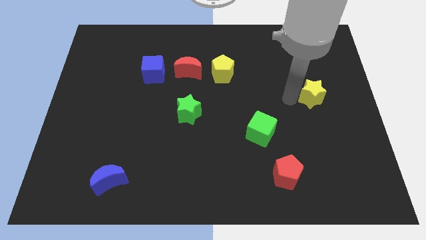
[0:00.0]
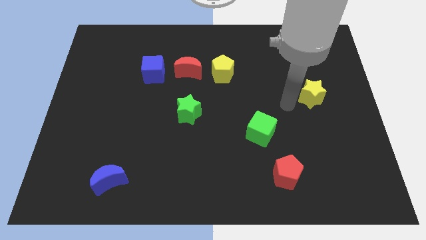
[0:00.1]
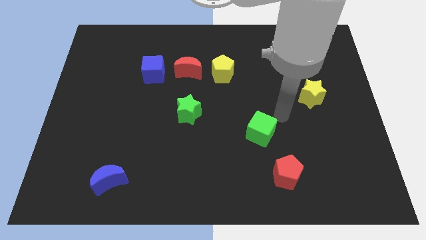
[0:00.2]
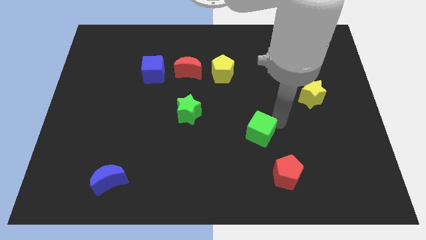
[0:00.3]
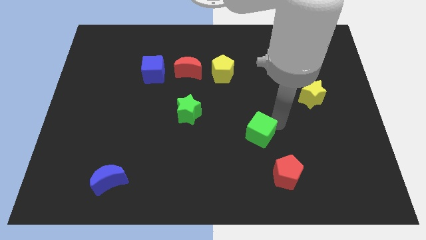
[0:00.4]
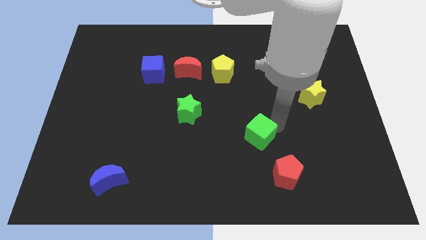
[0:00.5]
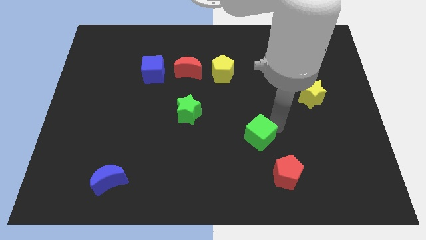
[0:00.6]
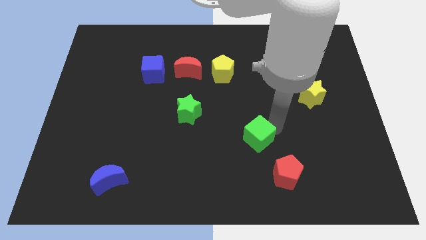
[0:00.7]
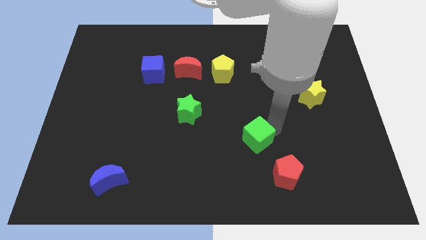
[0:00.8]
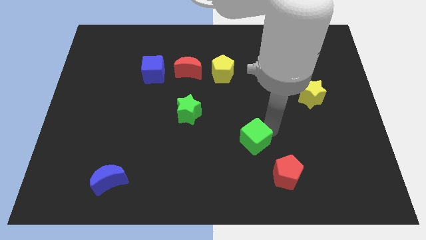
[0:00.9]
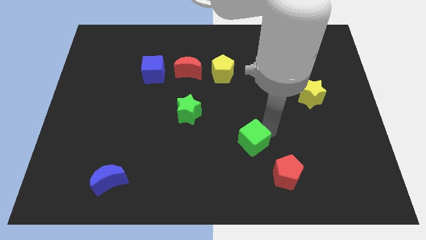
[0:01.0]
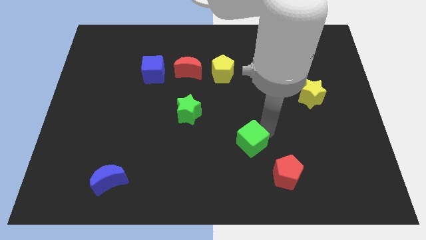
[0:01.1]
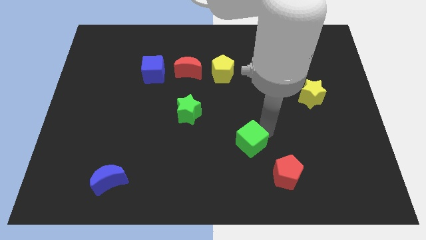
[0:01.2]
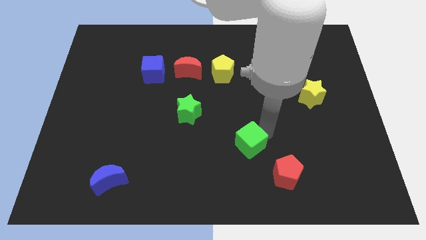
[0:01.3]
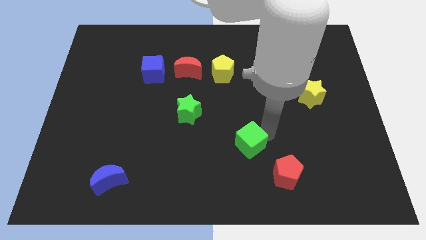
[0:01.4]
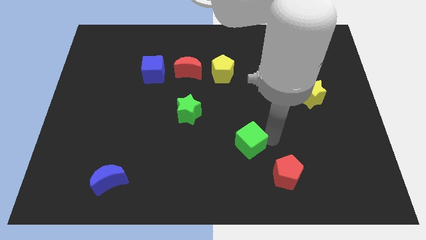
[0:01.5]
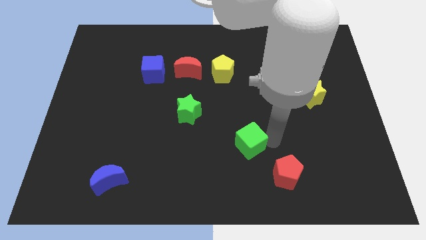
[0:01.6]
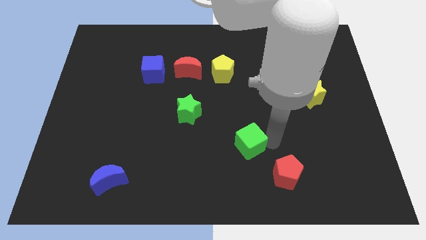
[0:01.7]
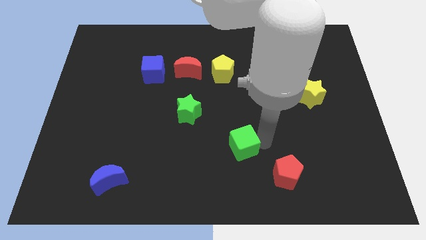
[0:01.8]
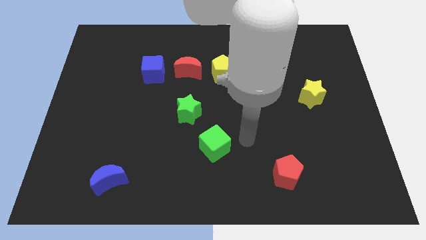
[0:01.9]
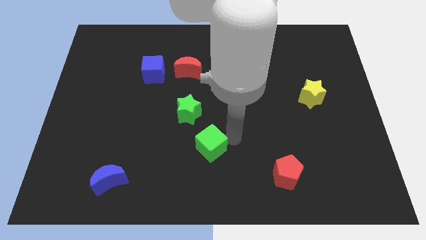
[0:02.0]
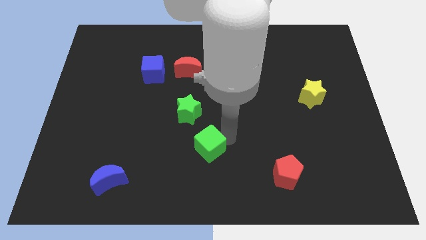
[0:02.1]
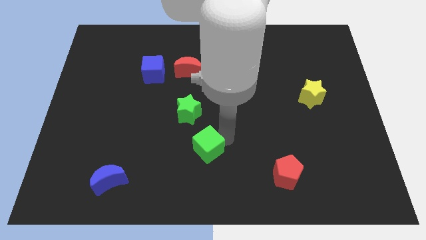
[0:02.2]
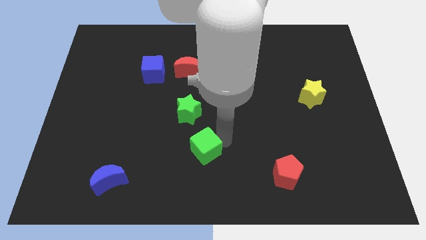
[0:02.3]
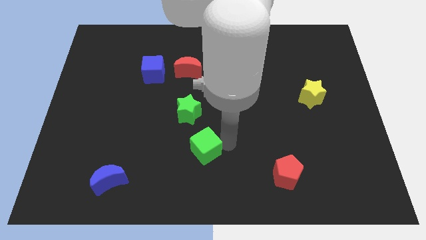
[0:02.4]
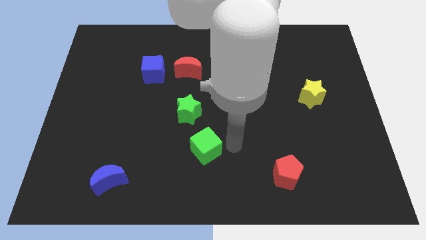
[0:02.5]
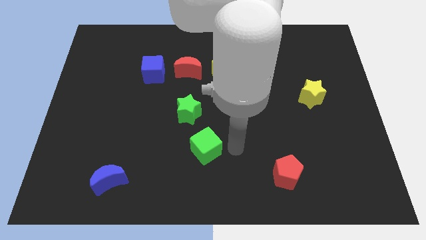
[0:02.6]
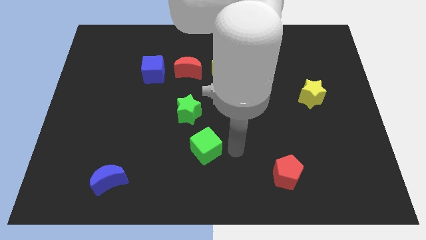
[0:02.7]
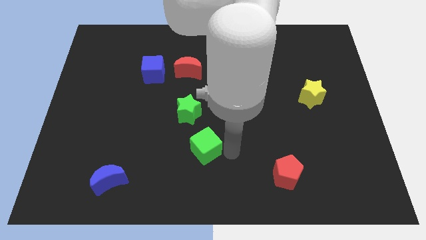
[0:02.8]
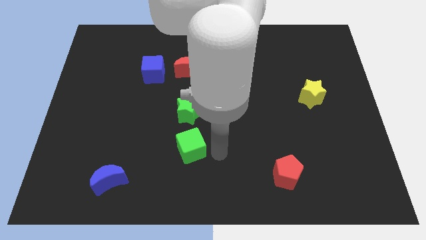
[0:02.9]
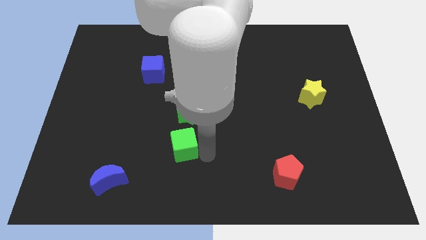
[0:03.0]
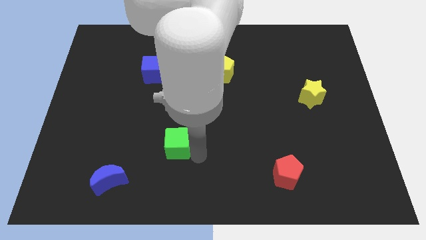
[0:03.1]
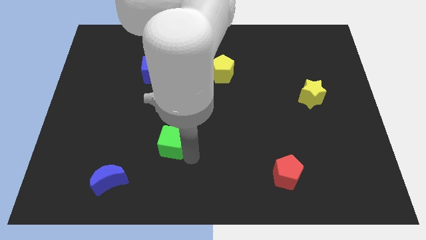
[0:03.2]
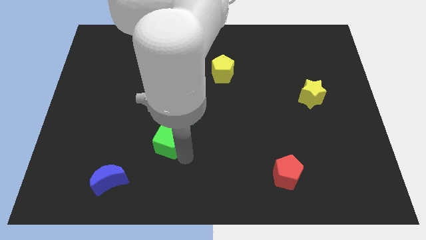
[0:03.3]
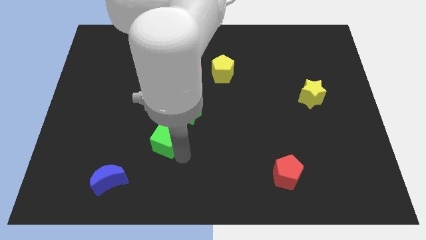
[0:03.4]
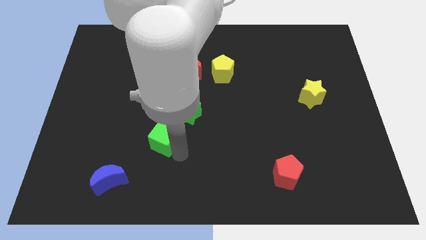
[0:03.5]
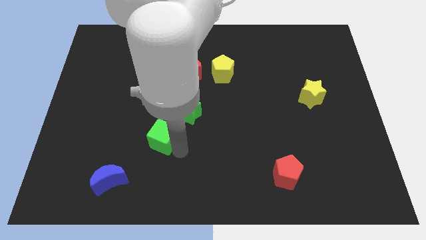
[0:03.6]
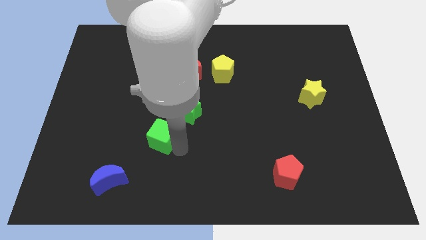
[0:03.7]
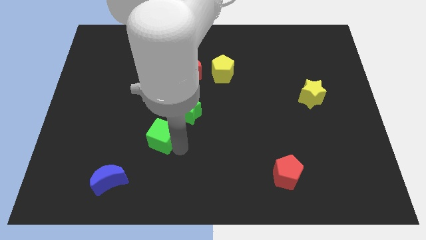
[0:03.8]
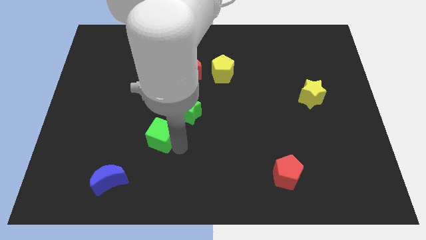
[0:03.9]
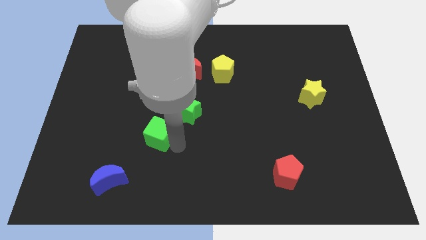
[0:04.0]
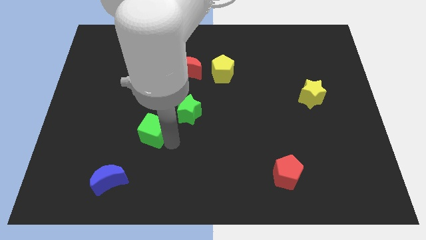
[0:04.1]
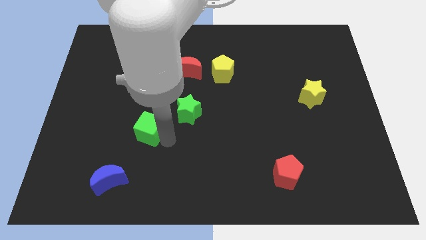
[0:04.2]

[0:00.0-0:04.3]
move the green cube left below the green star

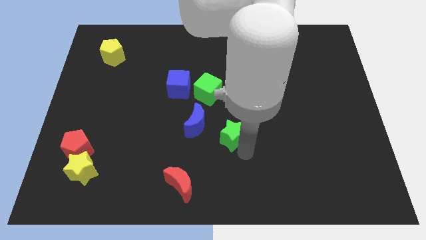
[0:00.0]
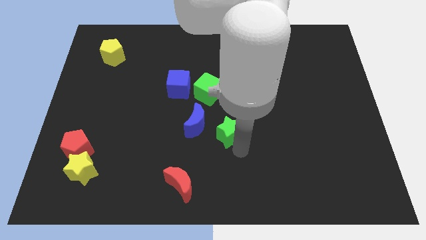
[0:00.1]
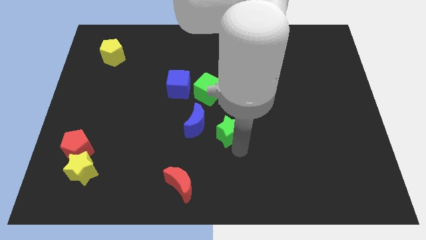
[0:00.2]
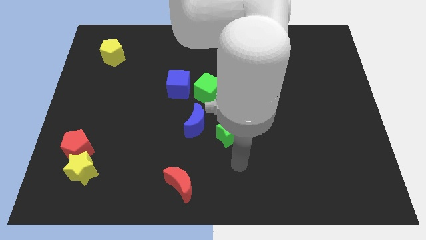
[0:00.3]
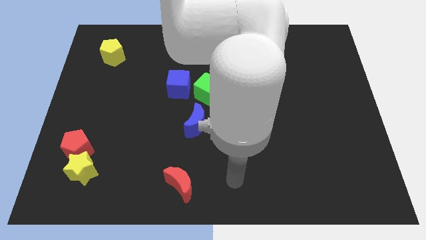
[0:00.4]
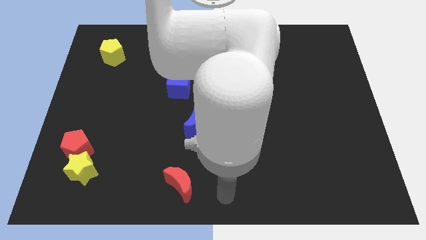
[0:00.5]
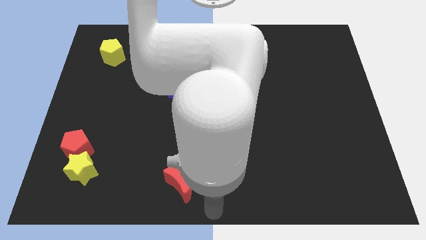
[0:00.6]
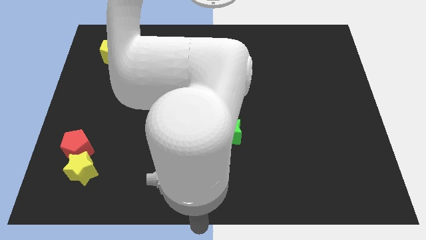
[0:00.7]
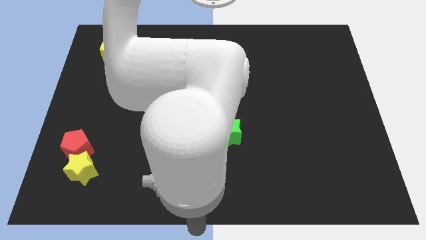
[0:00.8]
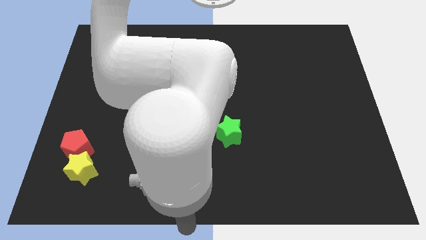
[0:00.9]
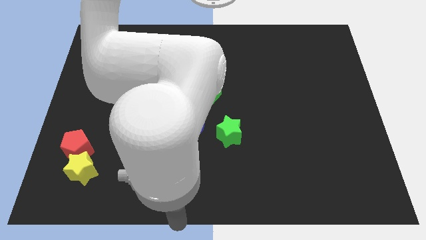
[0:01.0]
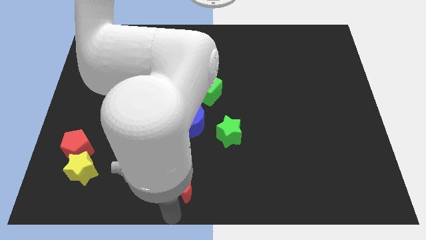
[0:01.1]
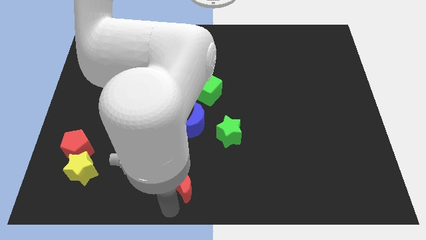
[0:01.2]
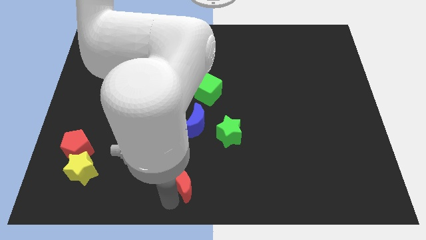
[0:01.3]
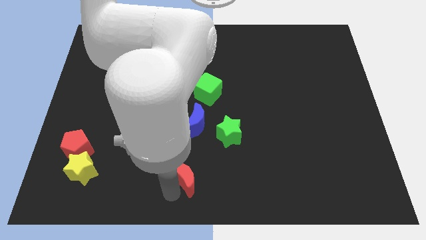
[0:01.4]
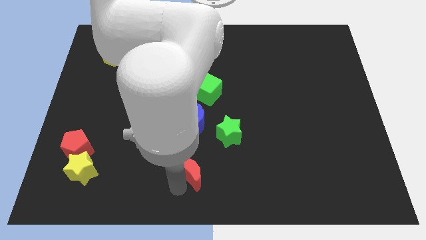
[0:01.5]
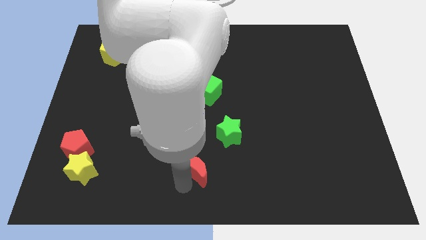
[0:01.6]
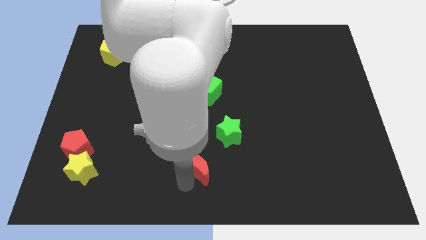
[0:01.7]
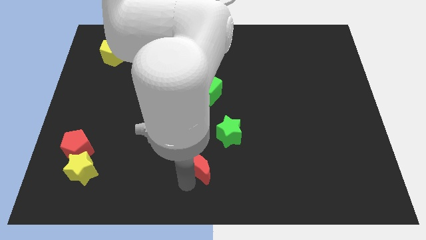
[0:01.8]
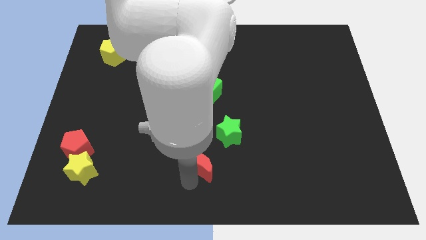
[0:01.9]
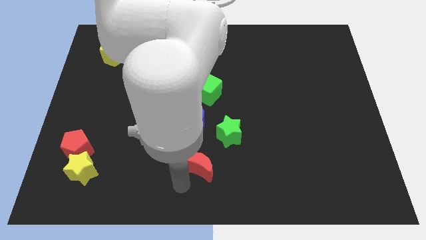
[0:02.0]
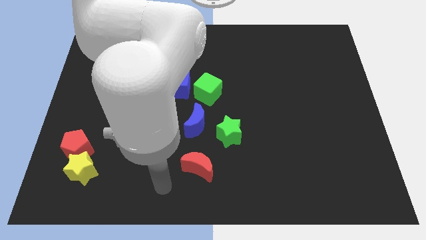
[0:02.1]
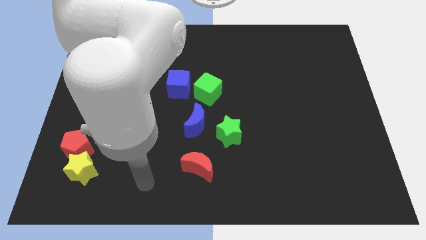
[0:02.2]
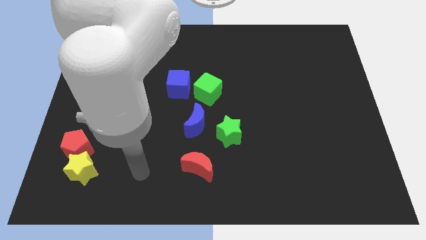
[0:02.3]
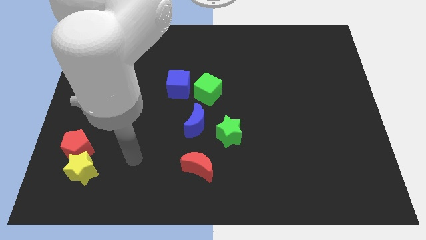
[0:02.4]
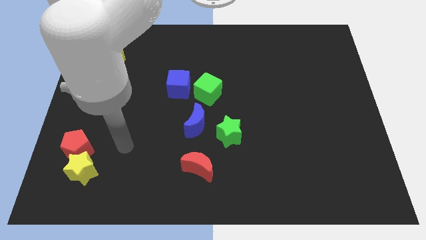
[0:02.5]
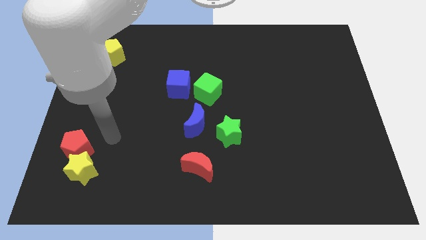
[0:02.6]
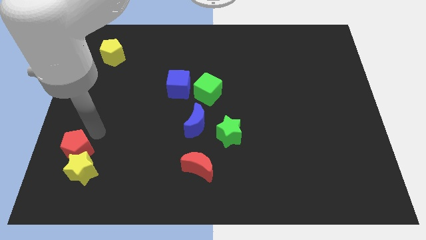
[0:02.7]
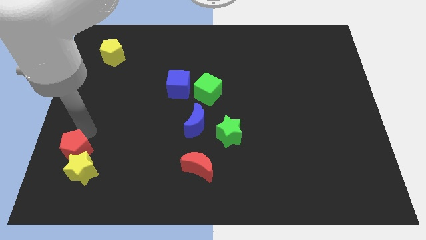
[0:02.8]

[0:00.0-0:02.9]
push the red moon upward

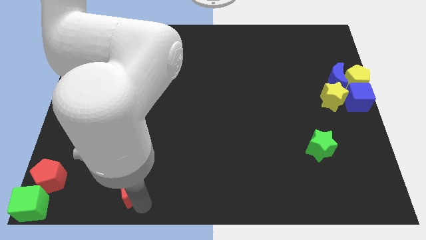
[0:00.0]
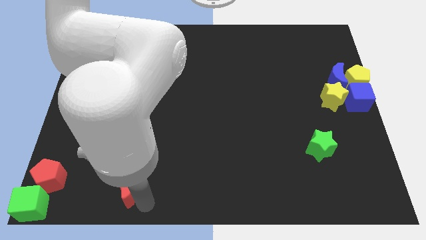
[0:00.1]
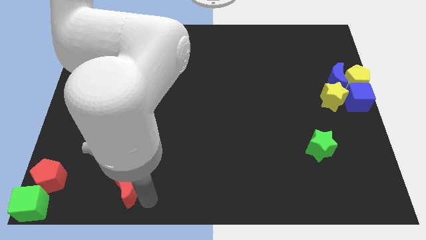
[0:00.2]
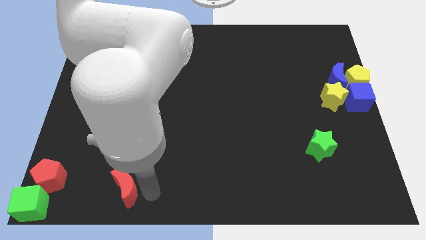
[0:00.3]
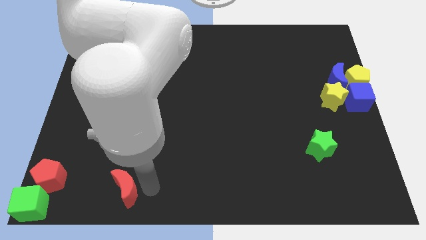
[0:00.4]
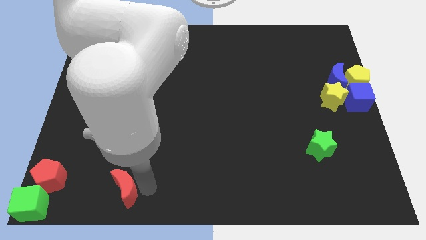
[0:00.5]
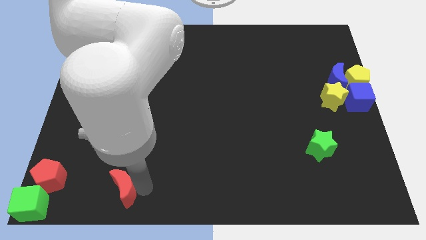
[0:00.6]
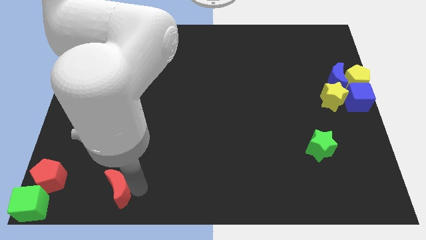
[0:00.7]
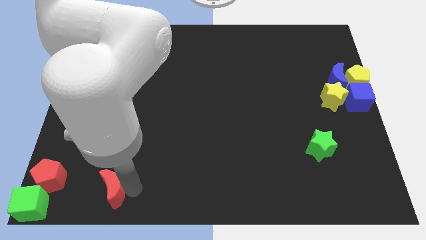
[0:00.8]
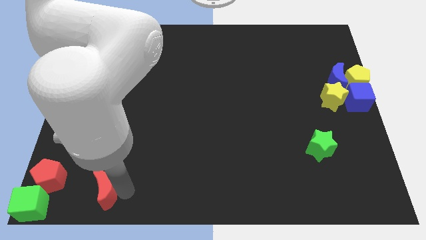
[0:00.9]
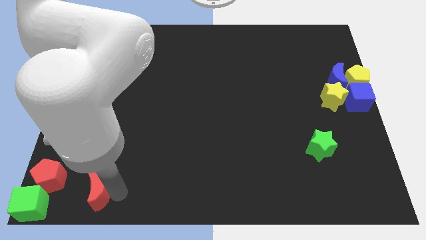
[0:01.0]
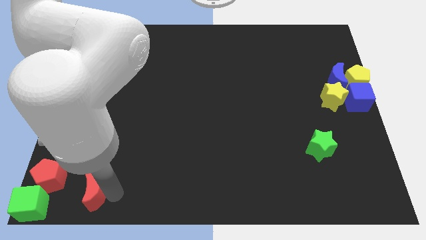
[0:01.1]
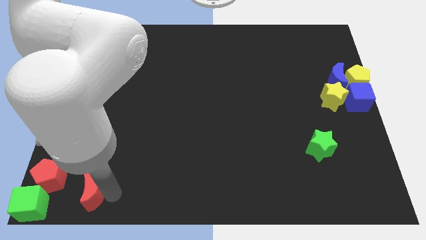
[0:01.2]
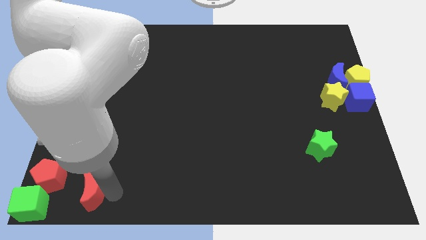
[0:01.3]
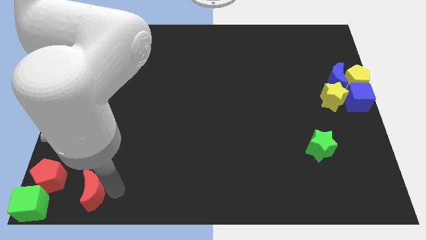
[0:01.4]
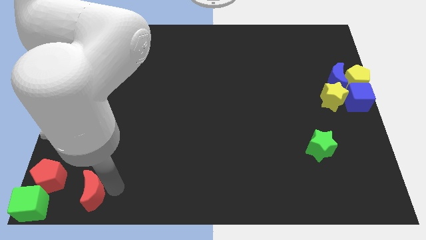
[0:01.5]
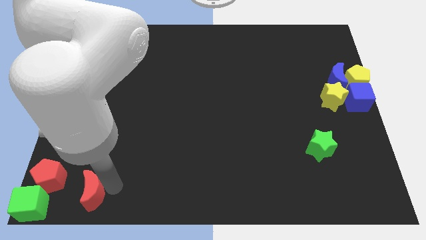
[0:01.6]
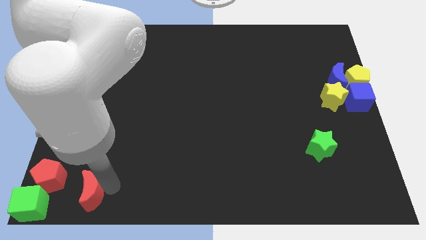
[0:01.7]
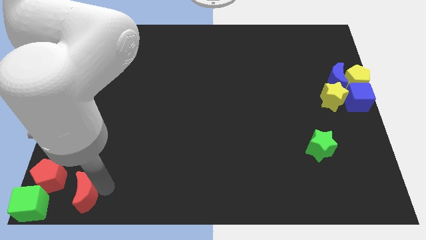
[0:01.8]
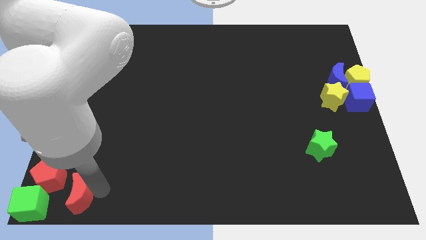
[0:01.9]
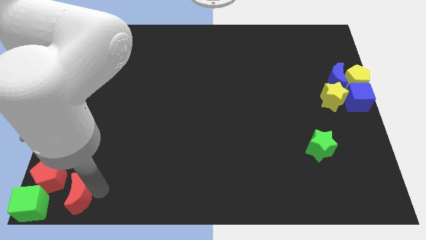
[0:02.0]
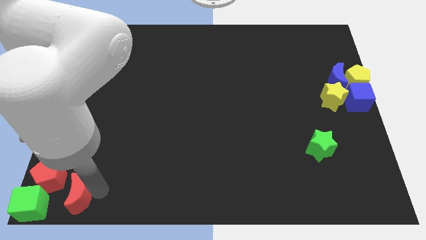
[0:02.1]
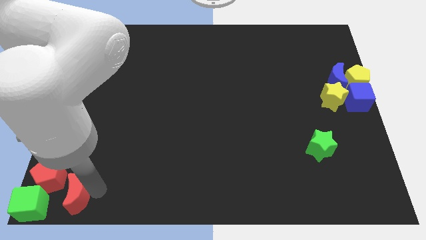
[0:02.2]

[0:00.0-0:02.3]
place red crescent beside red pentagon
